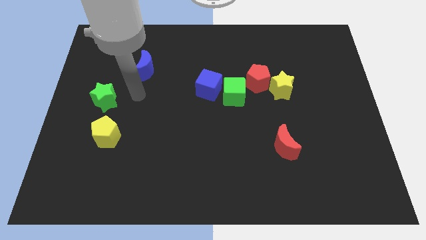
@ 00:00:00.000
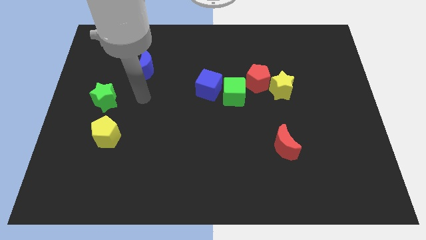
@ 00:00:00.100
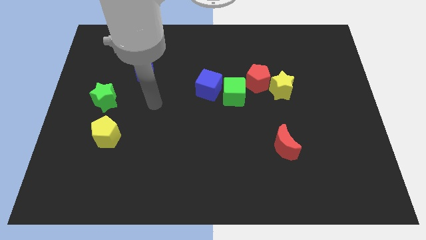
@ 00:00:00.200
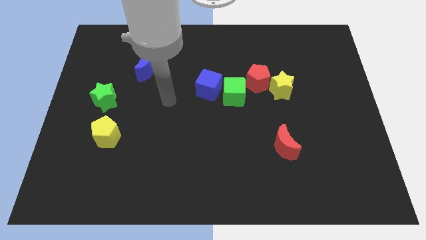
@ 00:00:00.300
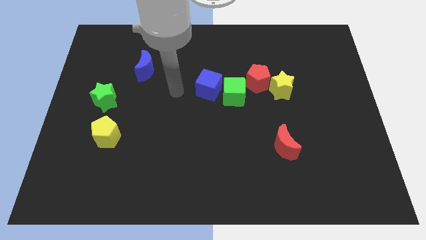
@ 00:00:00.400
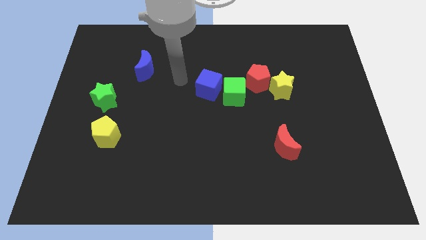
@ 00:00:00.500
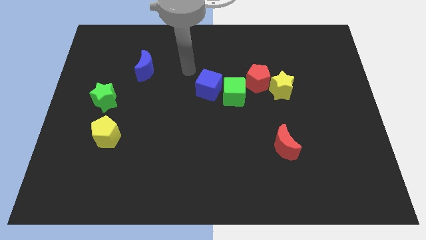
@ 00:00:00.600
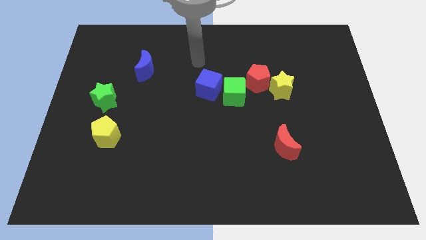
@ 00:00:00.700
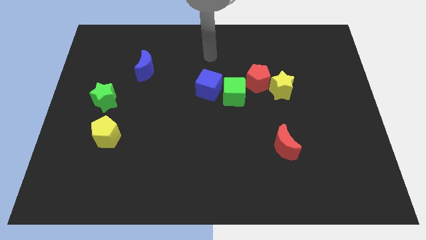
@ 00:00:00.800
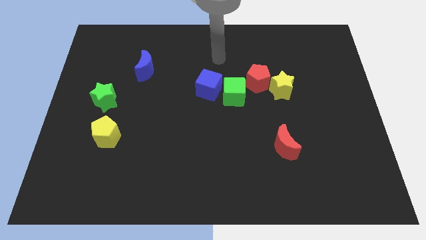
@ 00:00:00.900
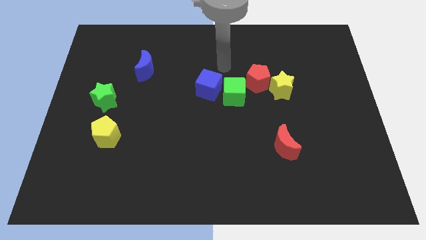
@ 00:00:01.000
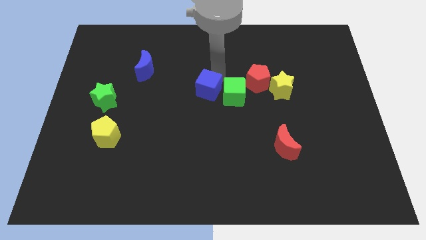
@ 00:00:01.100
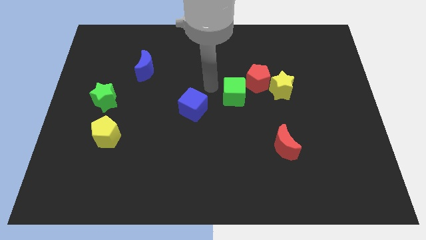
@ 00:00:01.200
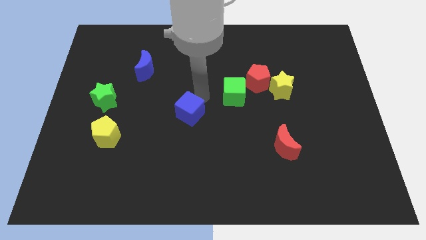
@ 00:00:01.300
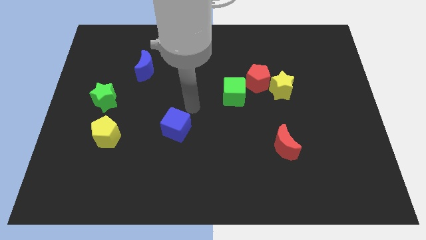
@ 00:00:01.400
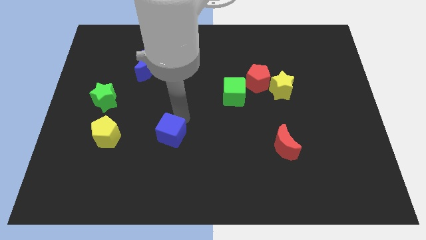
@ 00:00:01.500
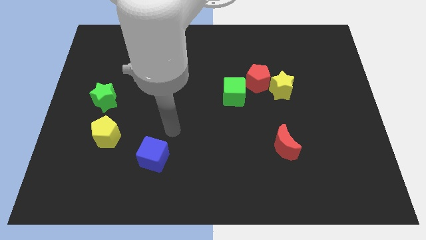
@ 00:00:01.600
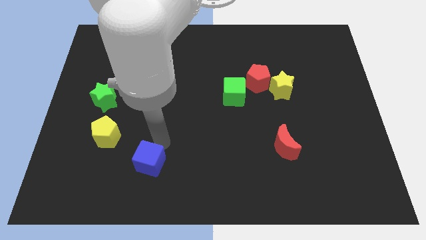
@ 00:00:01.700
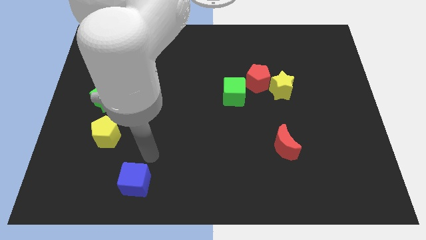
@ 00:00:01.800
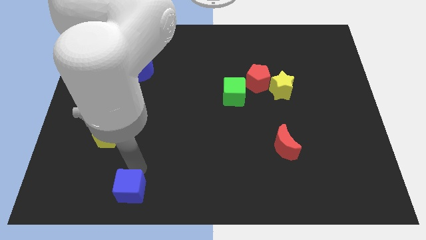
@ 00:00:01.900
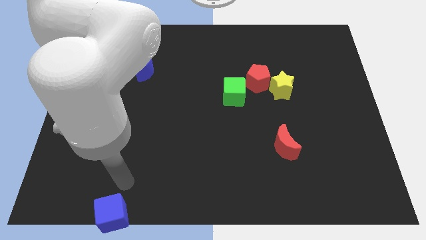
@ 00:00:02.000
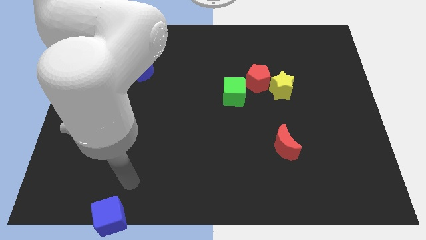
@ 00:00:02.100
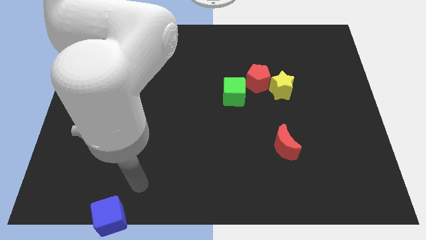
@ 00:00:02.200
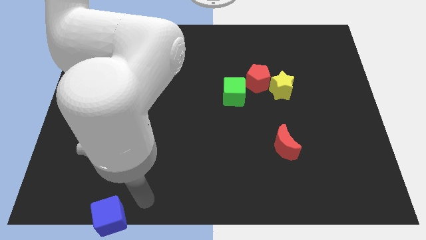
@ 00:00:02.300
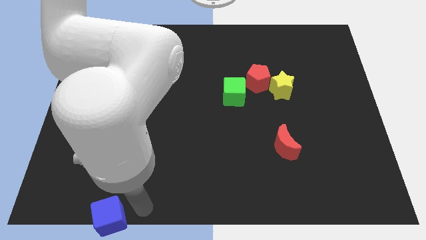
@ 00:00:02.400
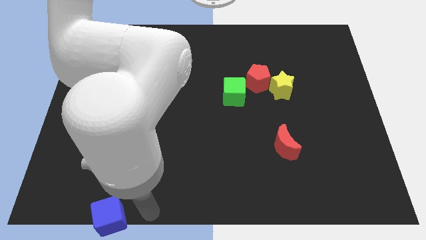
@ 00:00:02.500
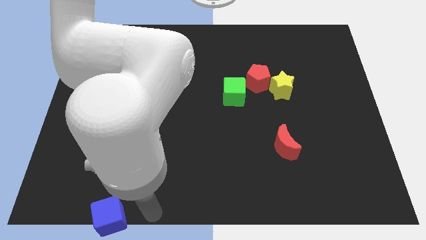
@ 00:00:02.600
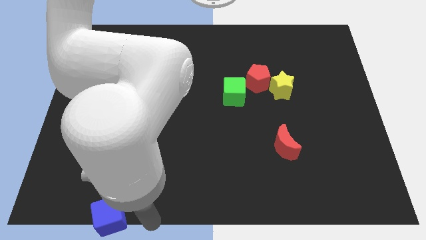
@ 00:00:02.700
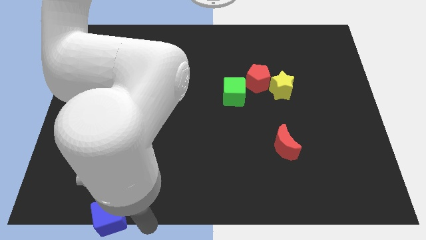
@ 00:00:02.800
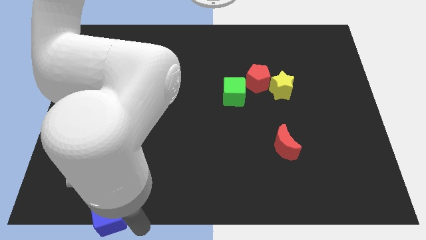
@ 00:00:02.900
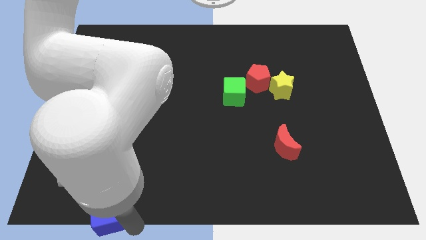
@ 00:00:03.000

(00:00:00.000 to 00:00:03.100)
slide blue cube towards bottom left

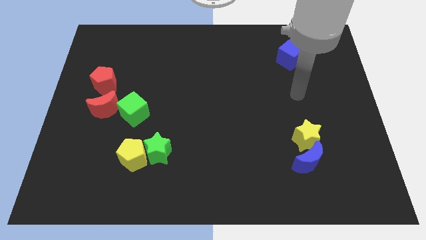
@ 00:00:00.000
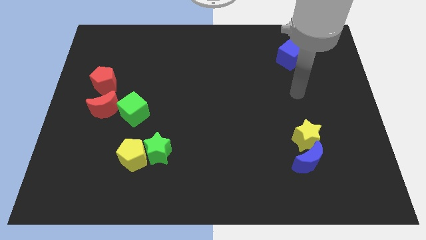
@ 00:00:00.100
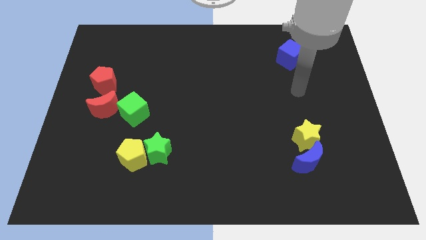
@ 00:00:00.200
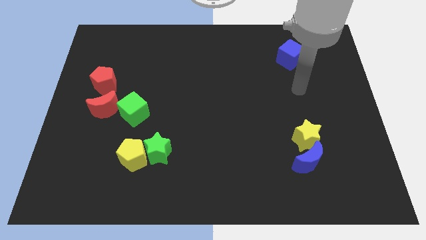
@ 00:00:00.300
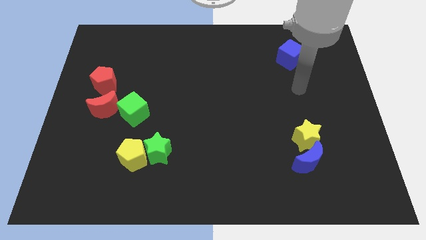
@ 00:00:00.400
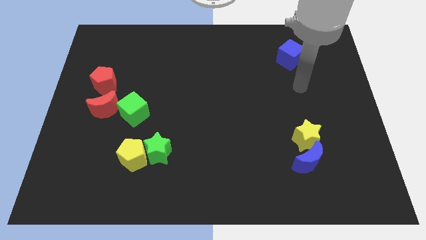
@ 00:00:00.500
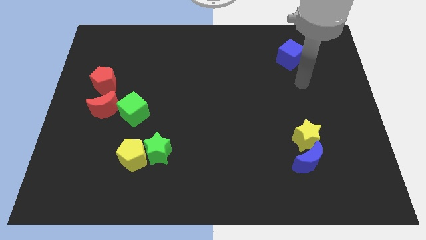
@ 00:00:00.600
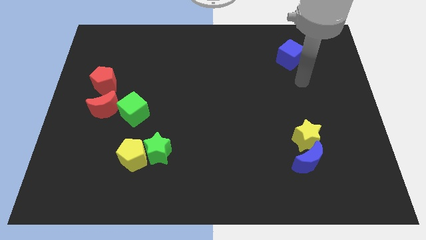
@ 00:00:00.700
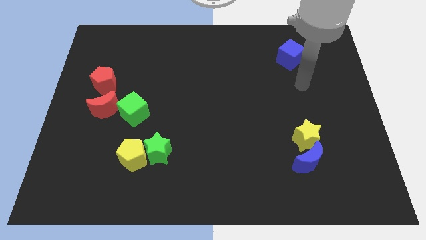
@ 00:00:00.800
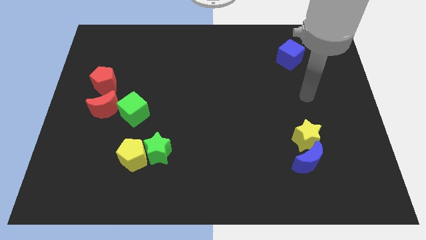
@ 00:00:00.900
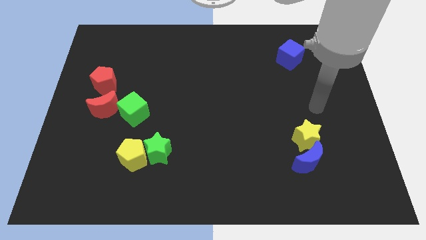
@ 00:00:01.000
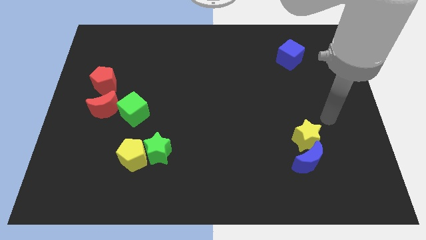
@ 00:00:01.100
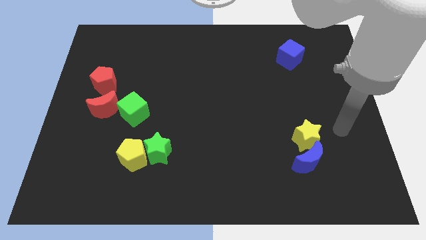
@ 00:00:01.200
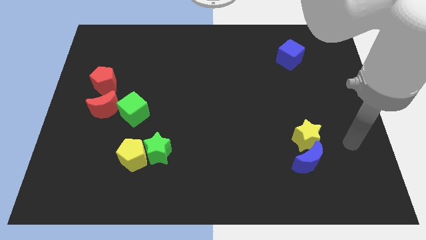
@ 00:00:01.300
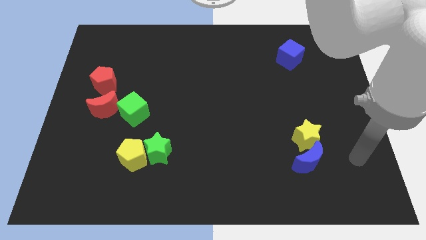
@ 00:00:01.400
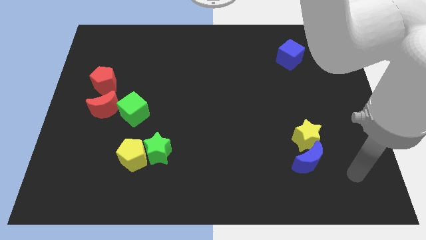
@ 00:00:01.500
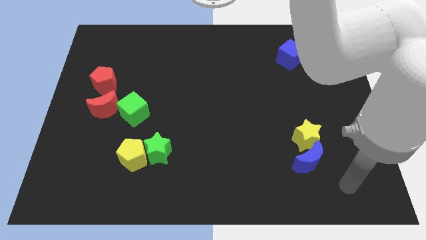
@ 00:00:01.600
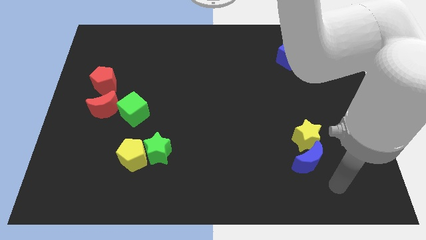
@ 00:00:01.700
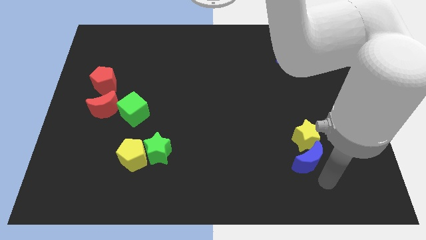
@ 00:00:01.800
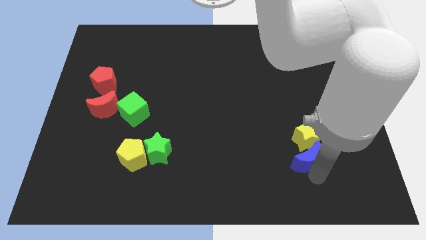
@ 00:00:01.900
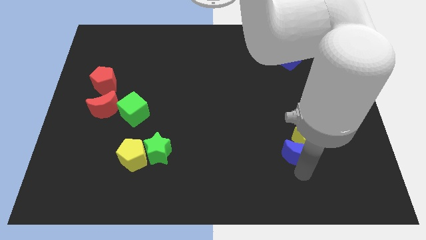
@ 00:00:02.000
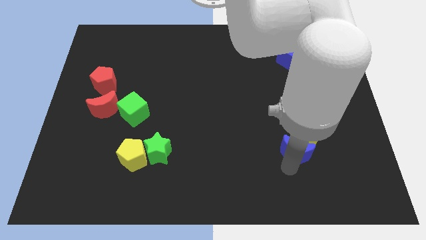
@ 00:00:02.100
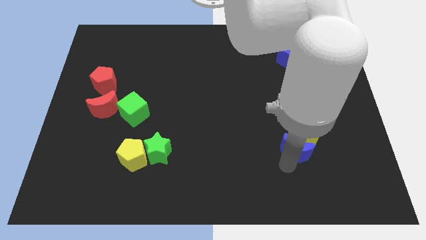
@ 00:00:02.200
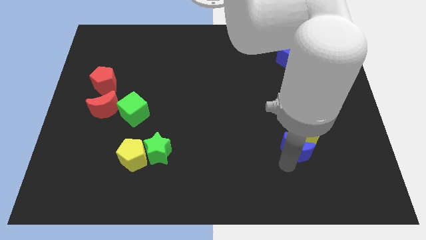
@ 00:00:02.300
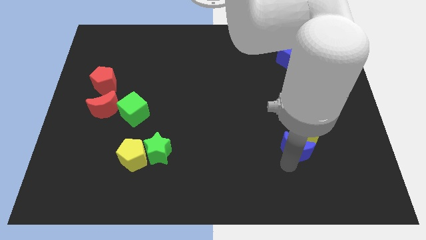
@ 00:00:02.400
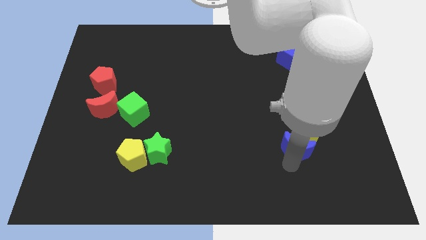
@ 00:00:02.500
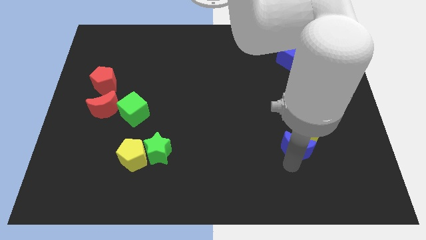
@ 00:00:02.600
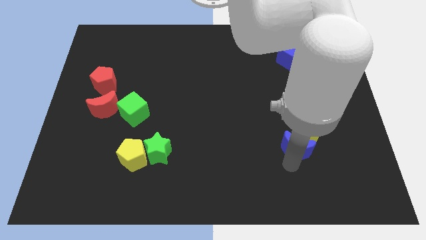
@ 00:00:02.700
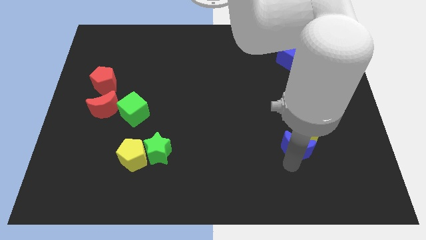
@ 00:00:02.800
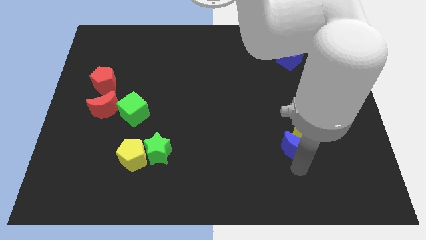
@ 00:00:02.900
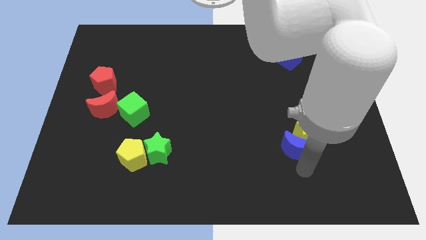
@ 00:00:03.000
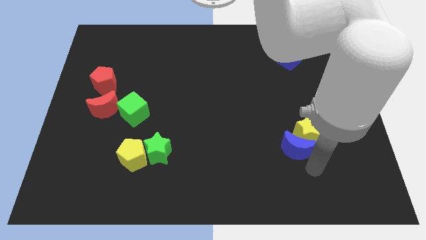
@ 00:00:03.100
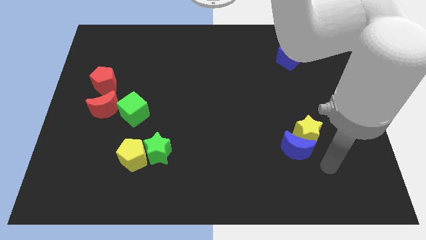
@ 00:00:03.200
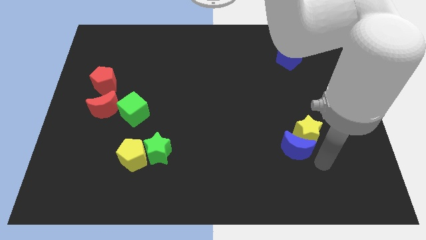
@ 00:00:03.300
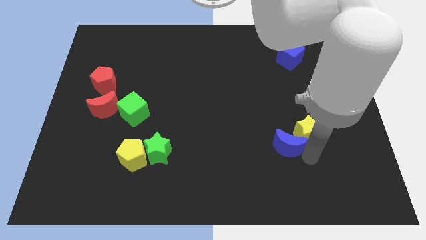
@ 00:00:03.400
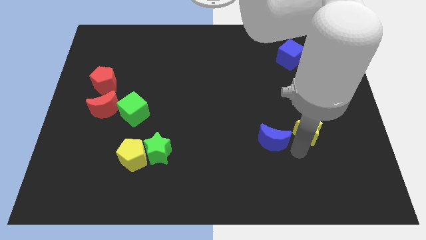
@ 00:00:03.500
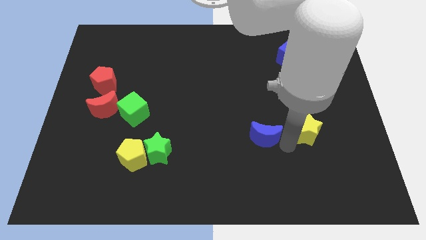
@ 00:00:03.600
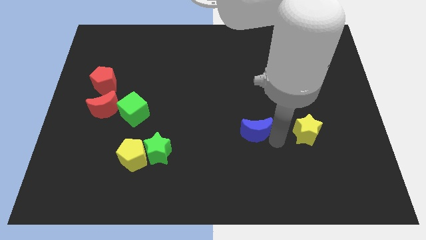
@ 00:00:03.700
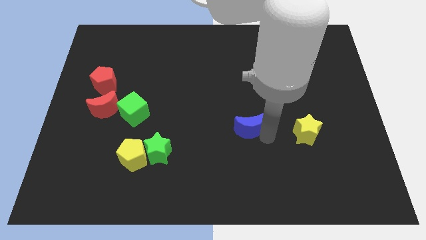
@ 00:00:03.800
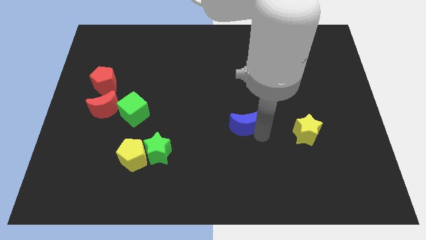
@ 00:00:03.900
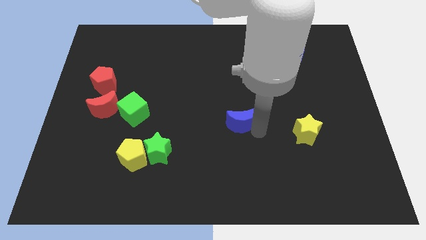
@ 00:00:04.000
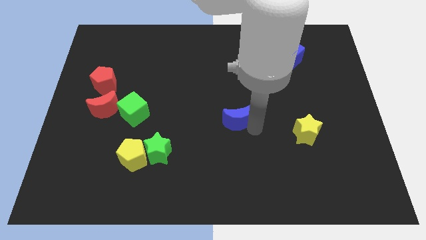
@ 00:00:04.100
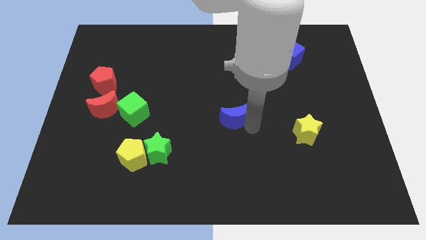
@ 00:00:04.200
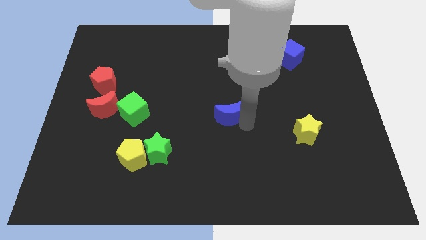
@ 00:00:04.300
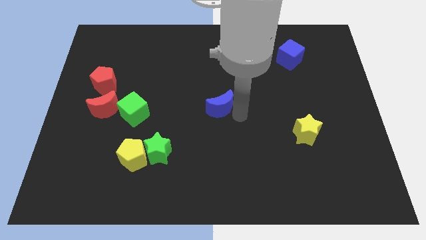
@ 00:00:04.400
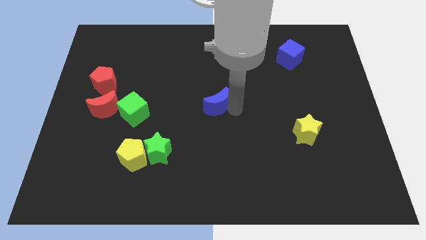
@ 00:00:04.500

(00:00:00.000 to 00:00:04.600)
move the blue moon towards the center of the board

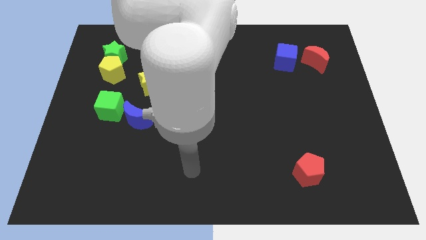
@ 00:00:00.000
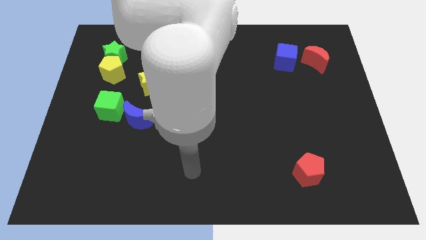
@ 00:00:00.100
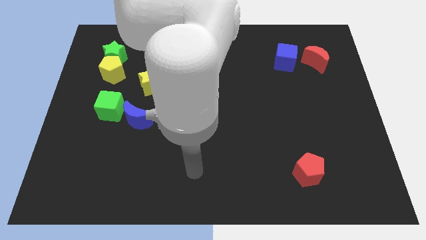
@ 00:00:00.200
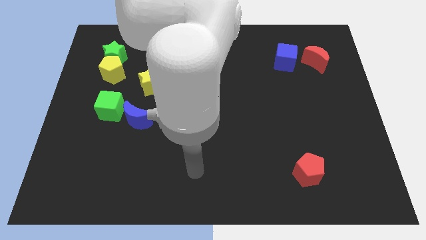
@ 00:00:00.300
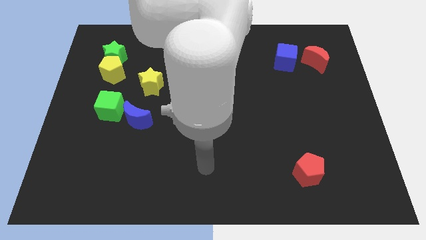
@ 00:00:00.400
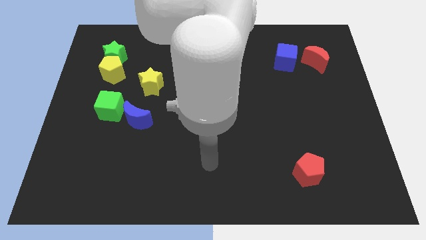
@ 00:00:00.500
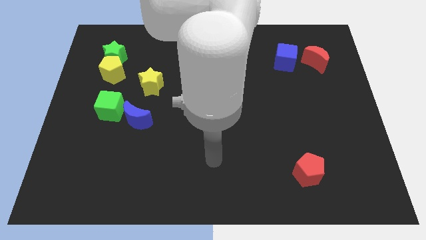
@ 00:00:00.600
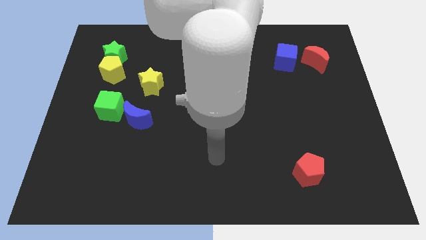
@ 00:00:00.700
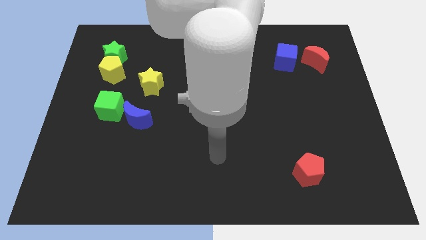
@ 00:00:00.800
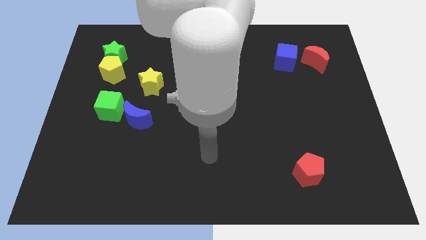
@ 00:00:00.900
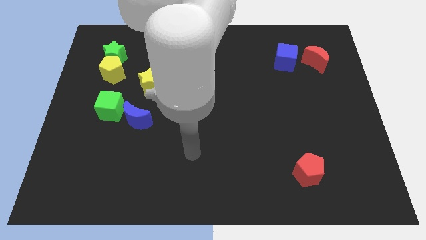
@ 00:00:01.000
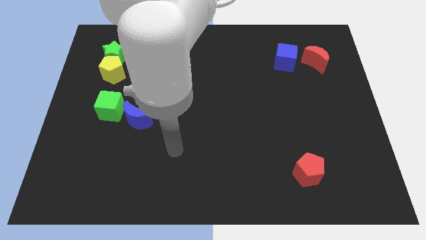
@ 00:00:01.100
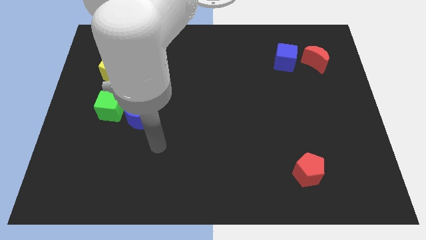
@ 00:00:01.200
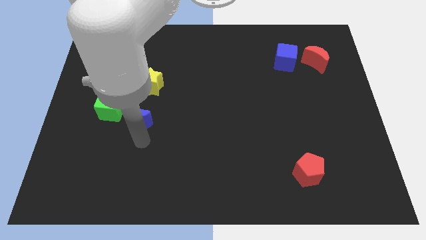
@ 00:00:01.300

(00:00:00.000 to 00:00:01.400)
place your hand vertically below the blue crescent
